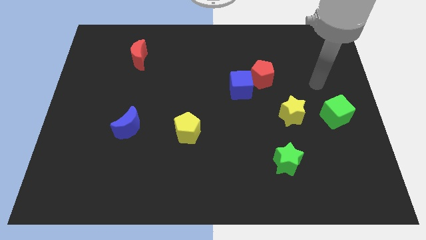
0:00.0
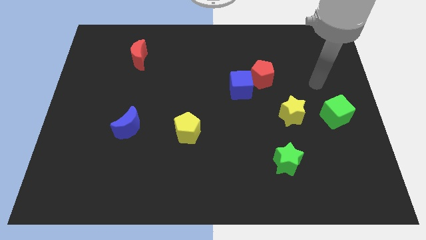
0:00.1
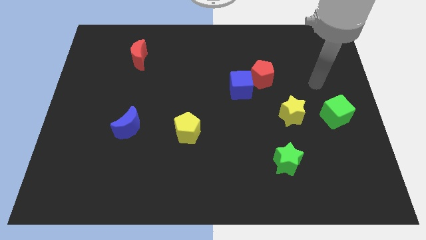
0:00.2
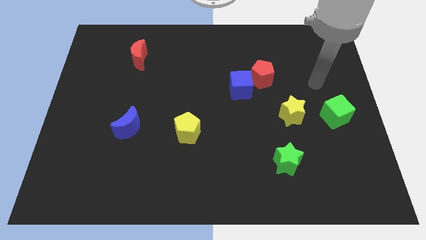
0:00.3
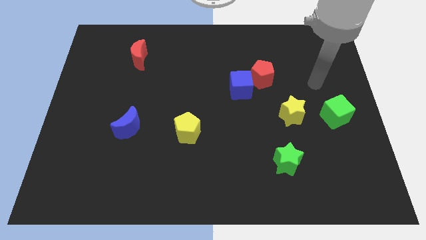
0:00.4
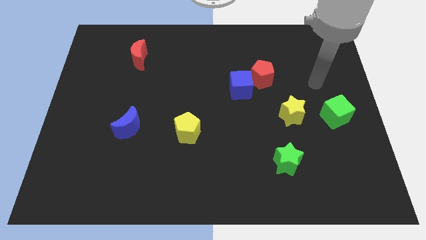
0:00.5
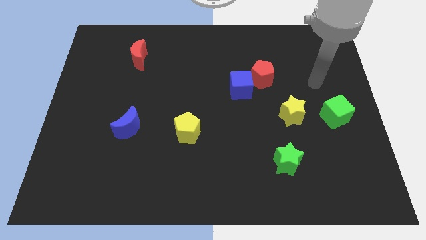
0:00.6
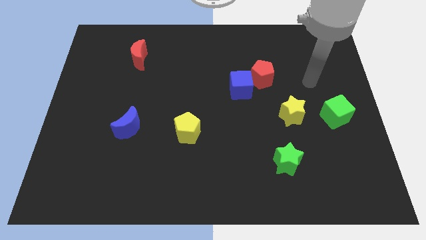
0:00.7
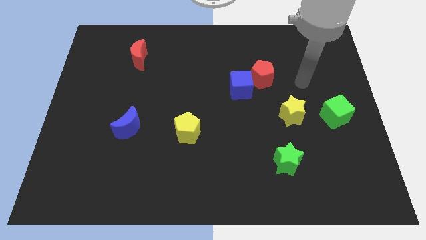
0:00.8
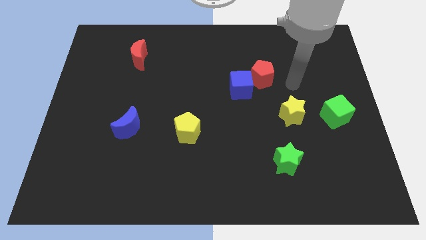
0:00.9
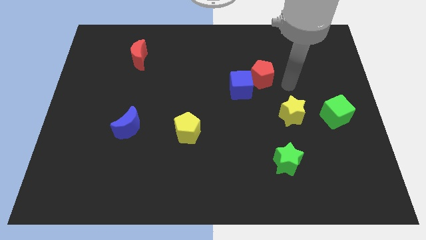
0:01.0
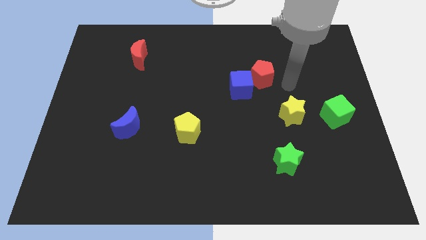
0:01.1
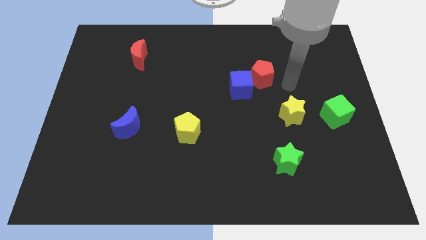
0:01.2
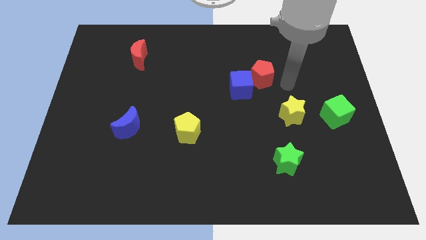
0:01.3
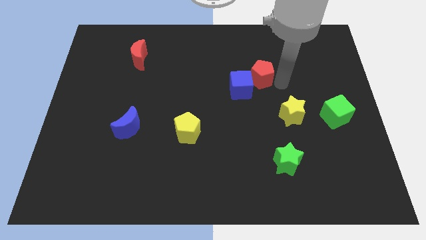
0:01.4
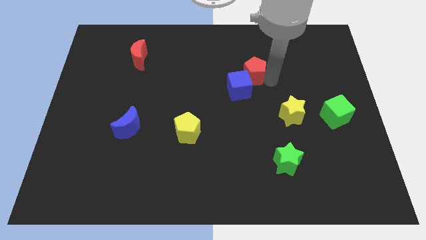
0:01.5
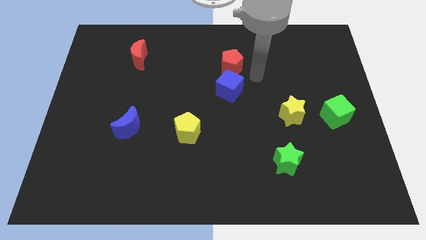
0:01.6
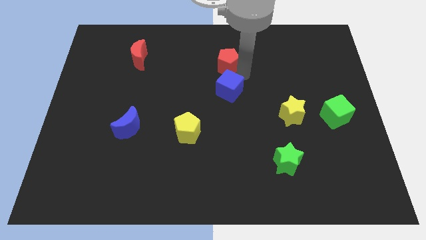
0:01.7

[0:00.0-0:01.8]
push the red pentagon to the top of the blue cube

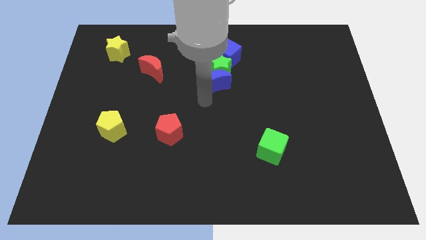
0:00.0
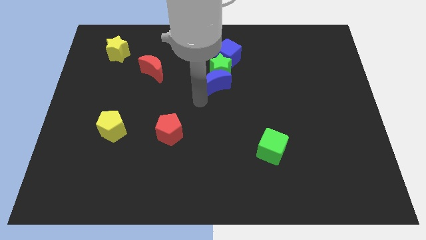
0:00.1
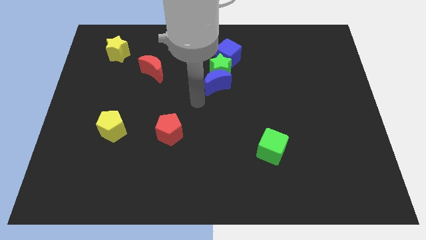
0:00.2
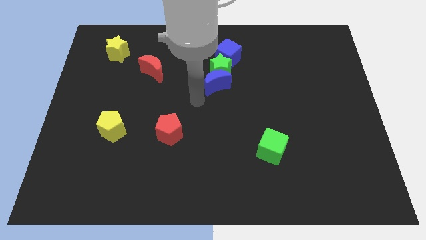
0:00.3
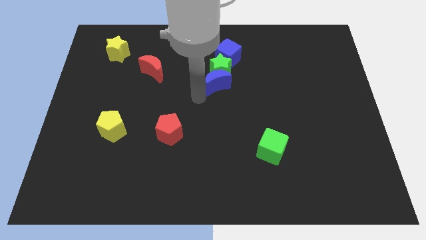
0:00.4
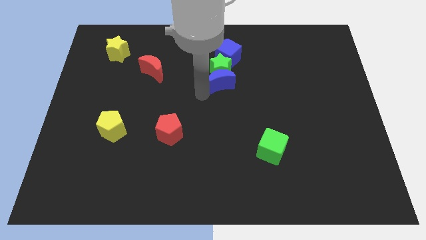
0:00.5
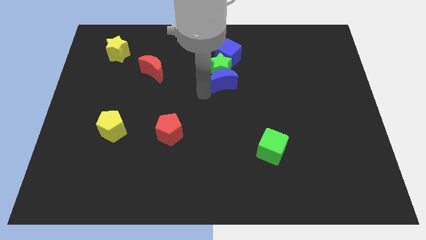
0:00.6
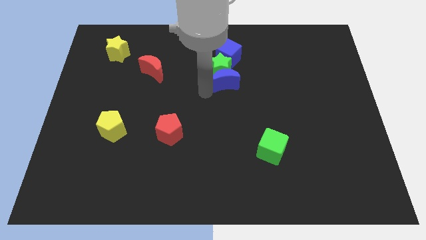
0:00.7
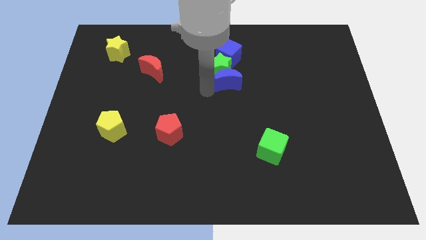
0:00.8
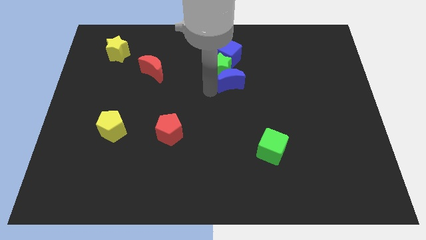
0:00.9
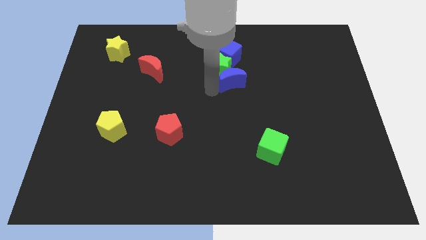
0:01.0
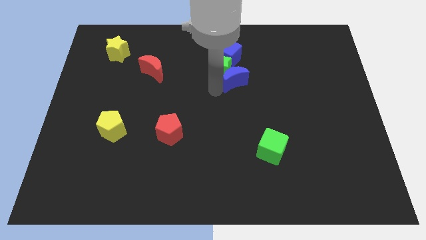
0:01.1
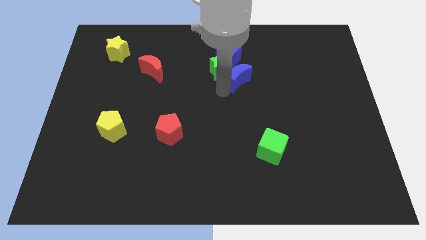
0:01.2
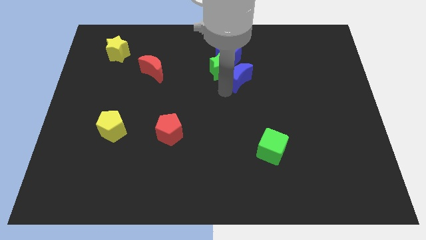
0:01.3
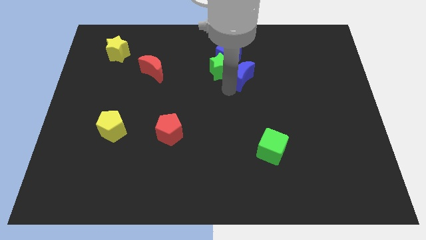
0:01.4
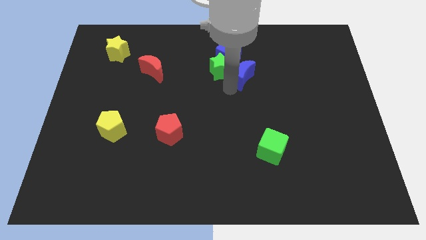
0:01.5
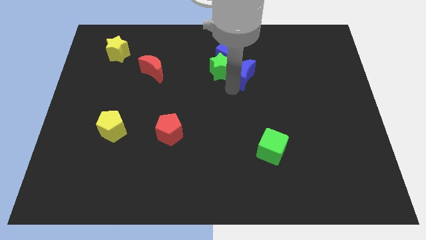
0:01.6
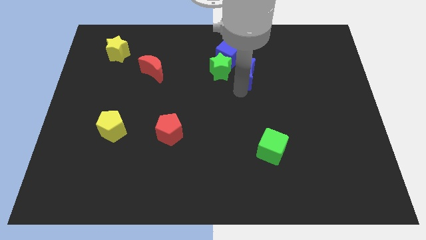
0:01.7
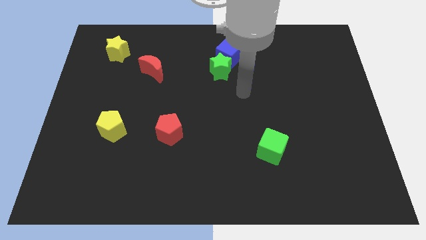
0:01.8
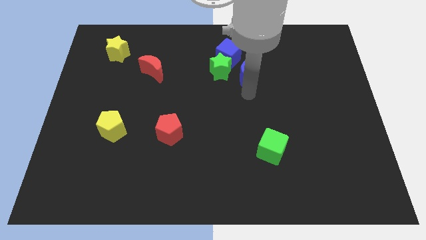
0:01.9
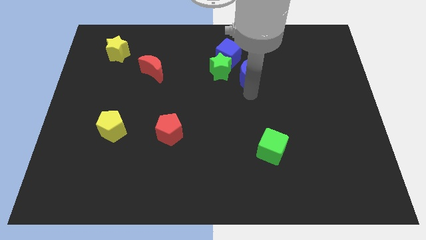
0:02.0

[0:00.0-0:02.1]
move the blue moon to the right of the green star

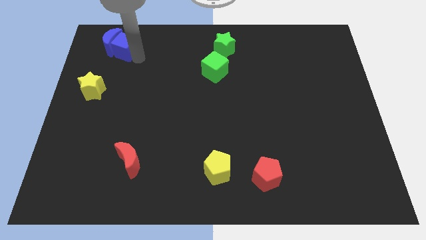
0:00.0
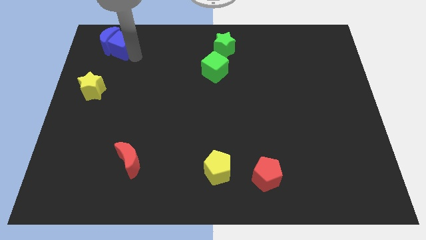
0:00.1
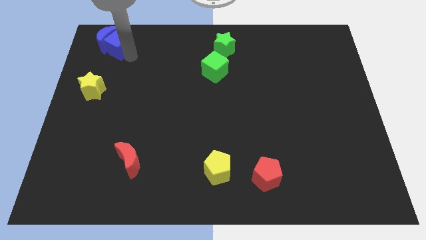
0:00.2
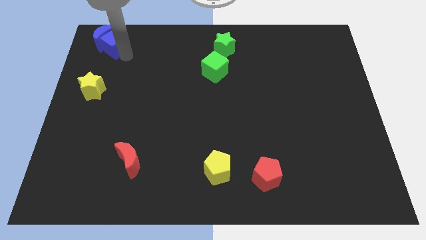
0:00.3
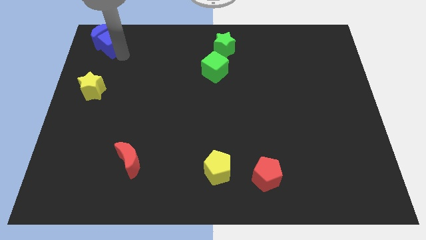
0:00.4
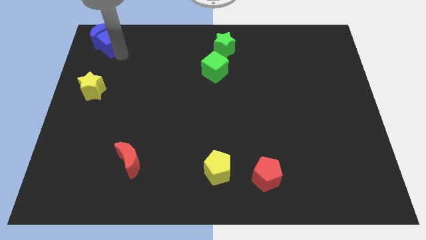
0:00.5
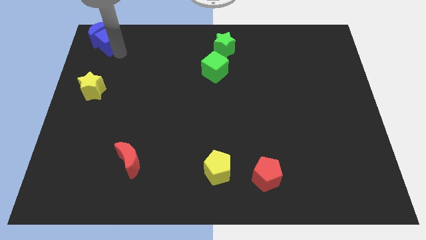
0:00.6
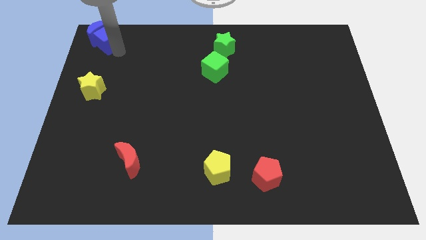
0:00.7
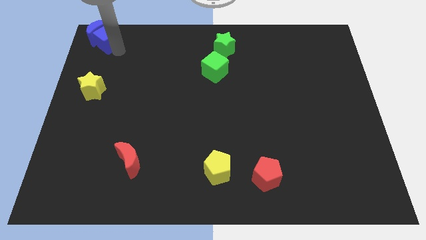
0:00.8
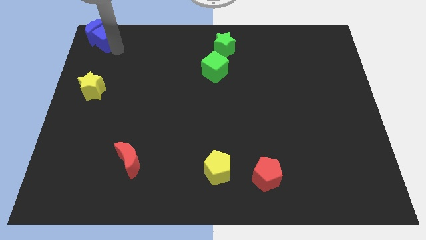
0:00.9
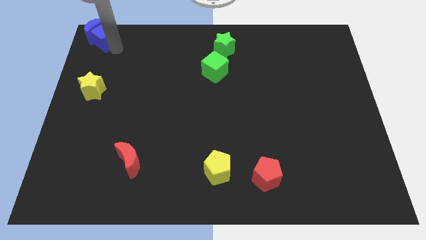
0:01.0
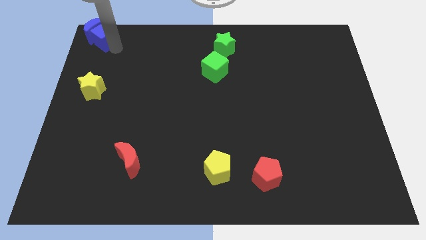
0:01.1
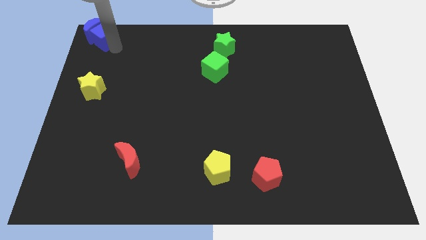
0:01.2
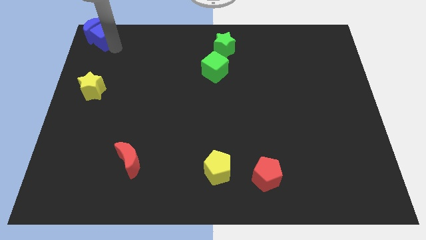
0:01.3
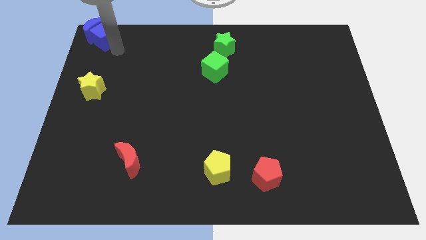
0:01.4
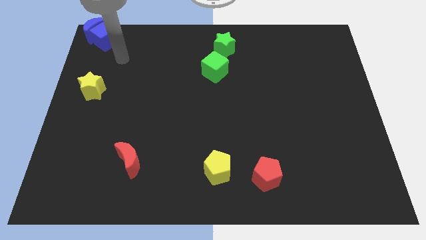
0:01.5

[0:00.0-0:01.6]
slightly push the blue blocks to the top left corner of the board

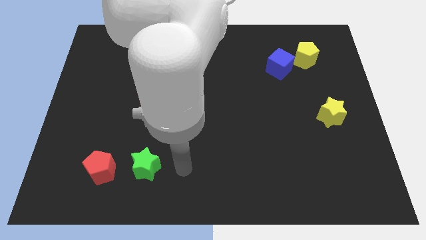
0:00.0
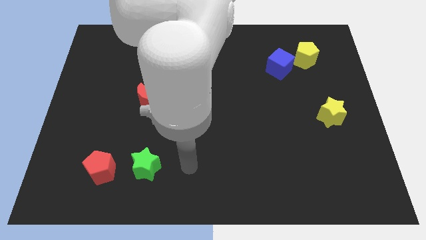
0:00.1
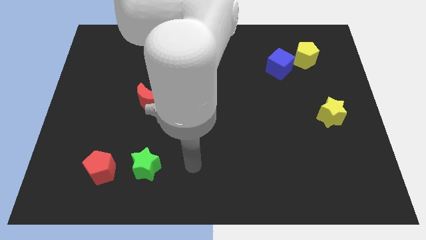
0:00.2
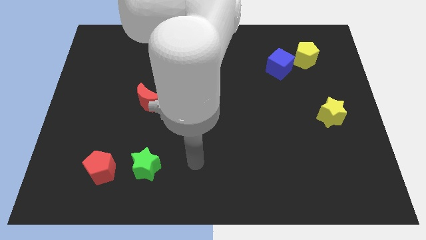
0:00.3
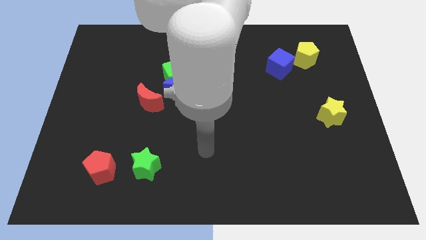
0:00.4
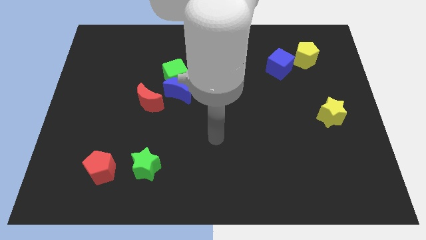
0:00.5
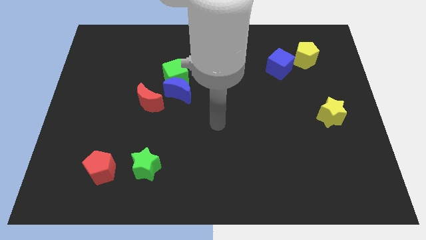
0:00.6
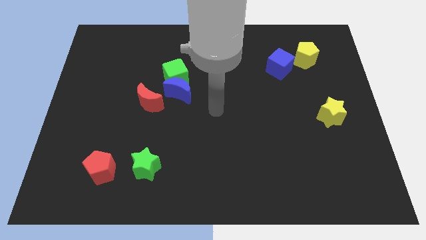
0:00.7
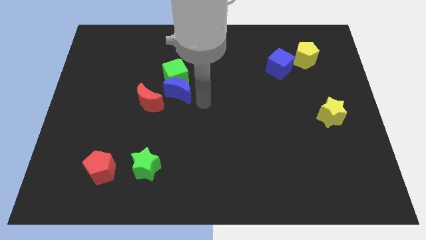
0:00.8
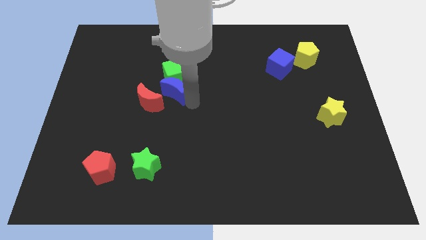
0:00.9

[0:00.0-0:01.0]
tap the blue crescent

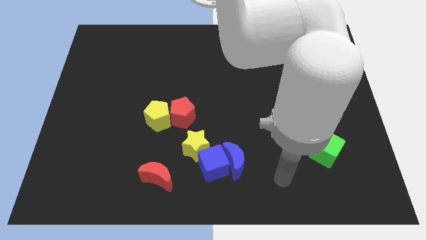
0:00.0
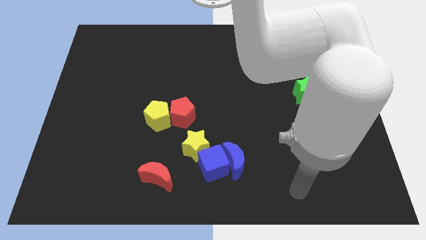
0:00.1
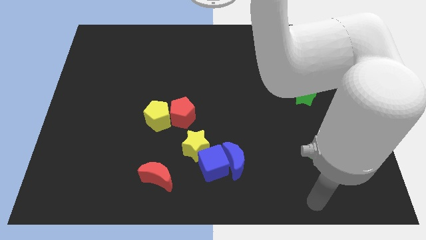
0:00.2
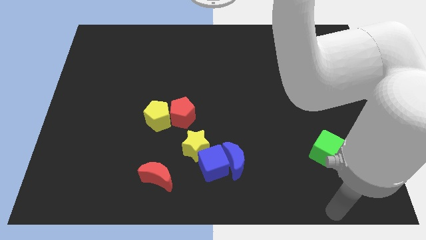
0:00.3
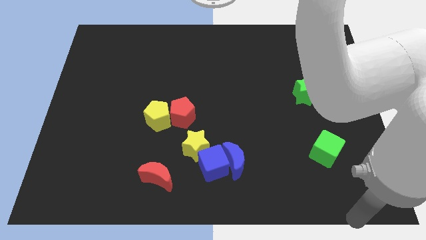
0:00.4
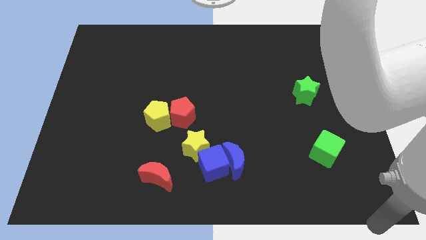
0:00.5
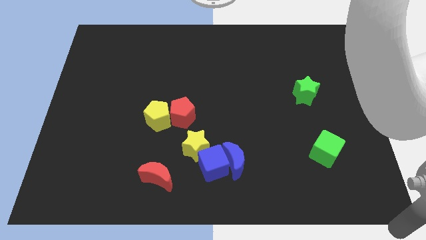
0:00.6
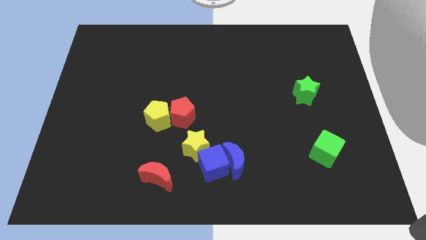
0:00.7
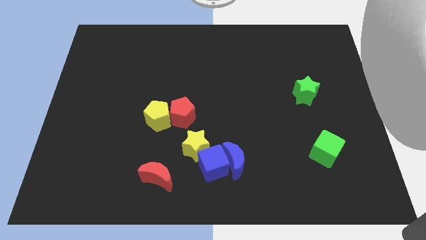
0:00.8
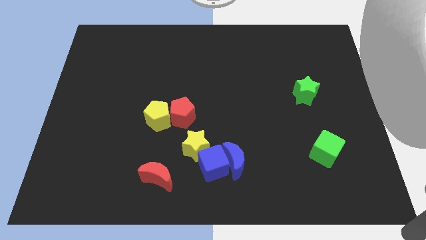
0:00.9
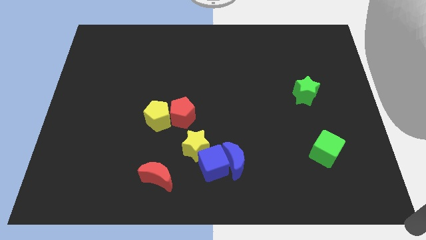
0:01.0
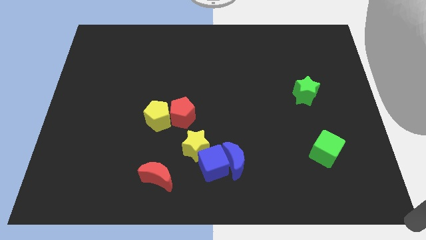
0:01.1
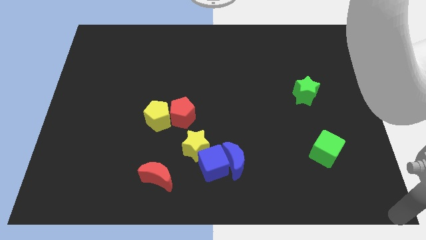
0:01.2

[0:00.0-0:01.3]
point your arm at the bottom right corner of the board

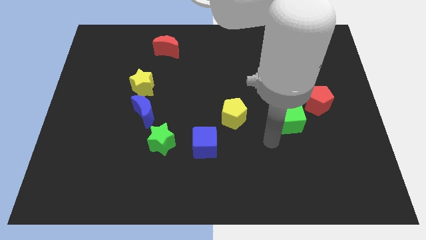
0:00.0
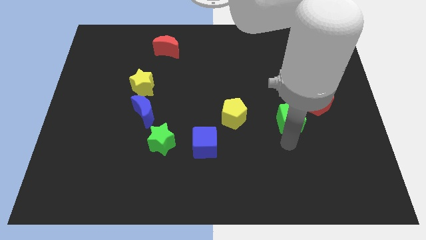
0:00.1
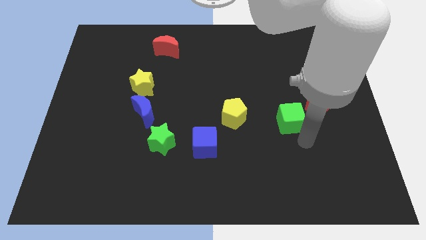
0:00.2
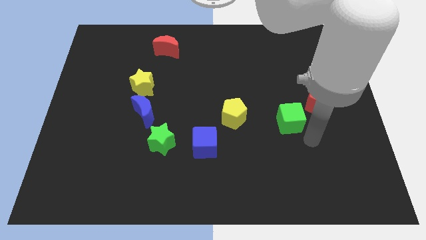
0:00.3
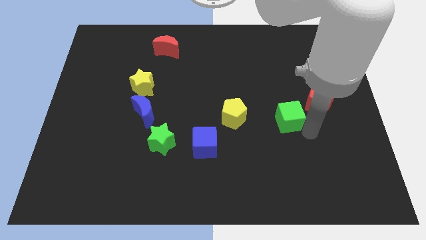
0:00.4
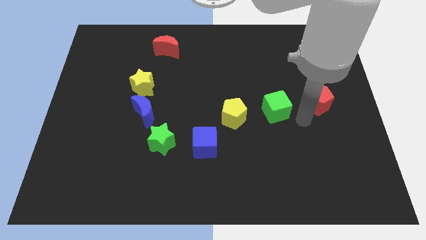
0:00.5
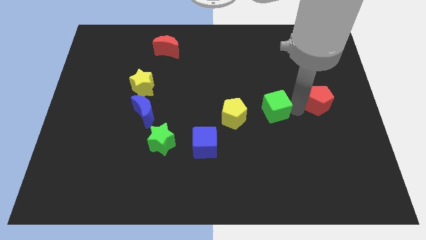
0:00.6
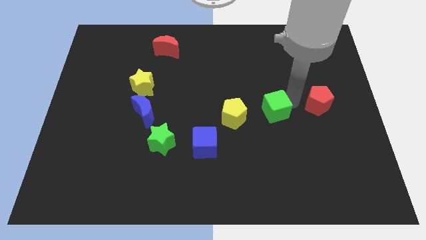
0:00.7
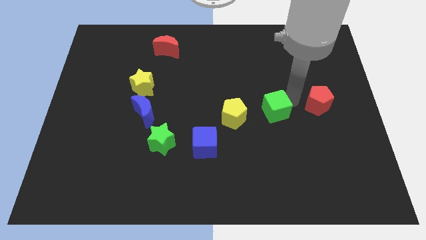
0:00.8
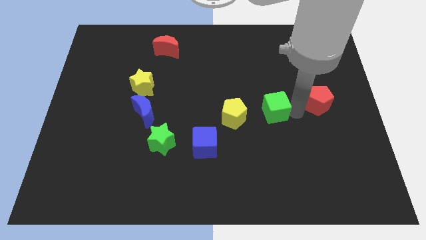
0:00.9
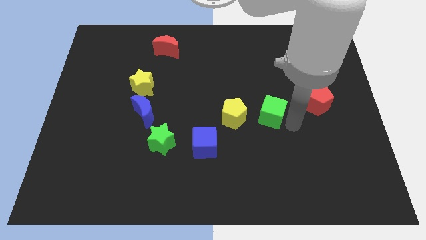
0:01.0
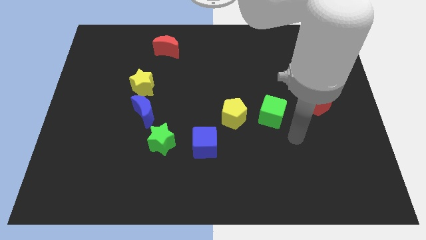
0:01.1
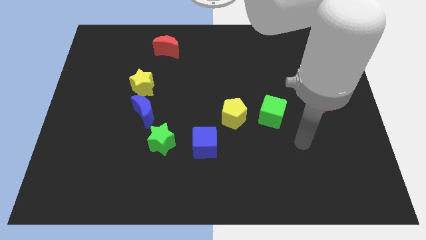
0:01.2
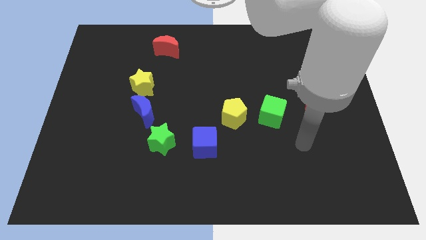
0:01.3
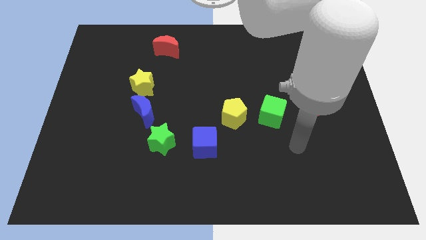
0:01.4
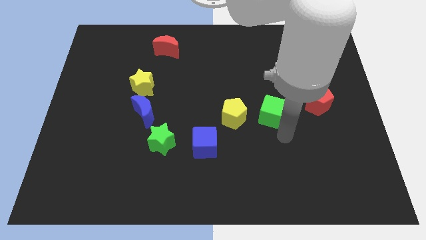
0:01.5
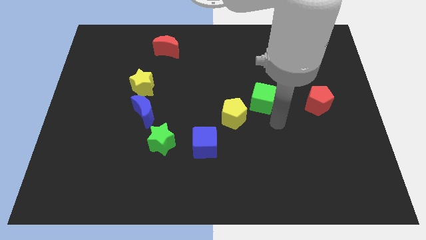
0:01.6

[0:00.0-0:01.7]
push the green cube towards the top right of the yellow pentagon
